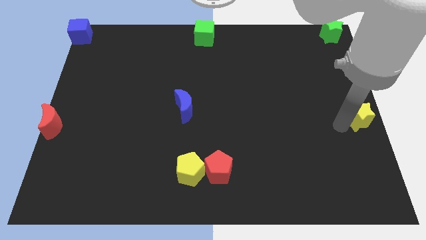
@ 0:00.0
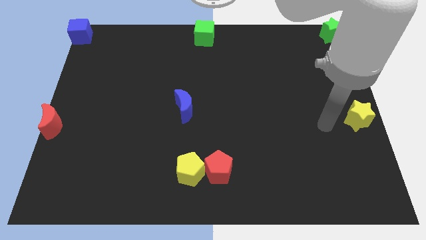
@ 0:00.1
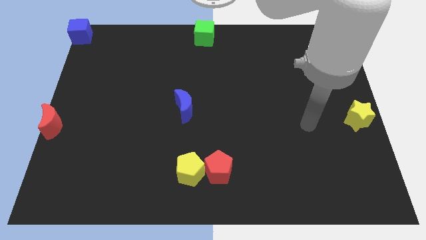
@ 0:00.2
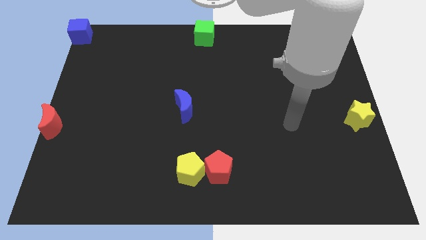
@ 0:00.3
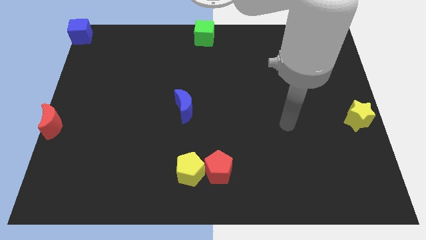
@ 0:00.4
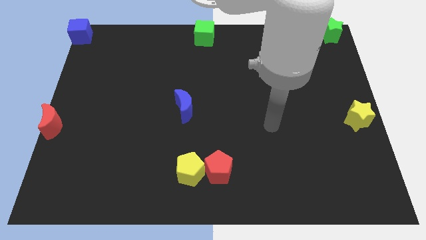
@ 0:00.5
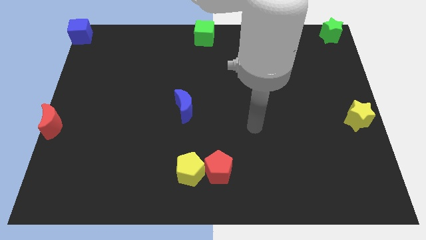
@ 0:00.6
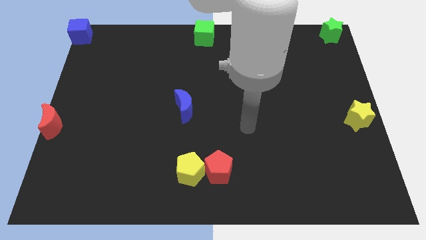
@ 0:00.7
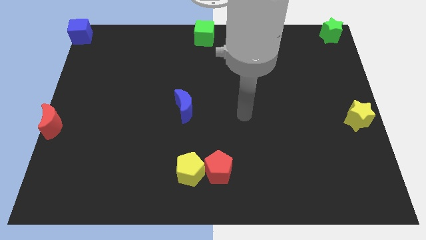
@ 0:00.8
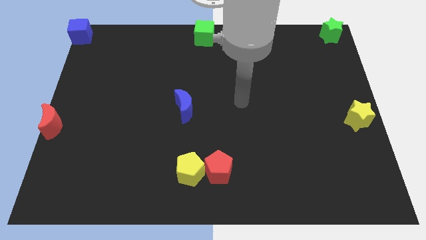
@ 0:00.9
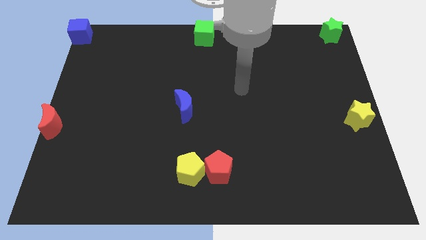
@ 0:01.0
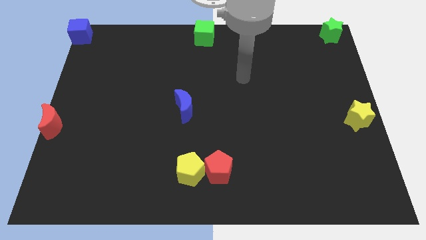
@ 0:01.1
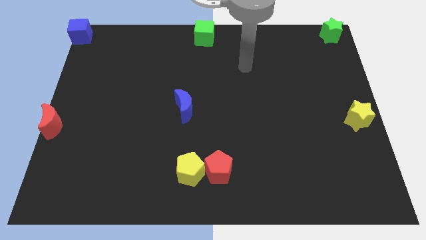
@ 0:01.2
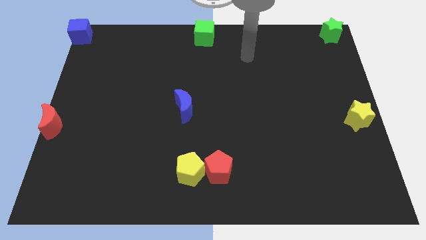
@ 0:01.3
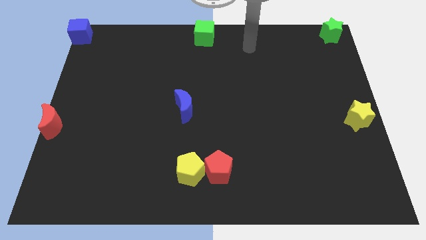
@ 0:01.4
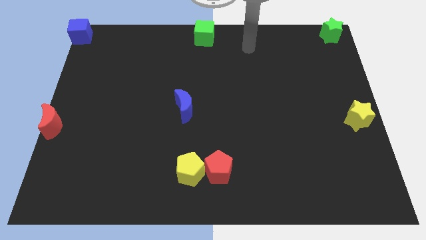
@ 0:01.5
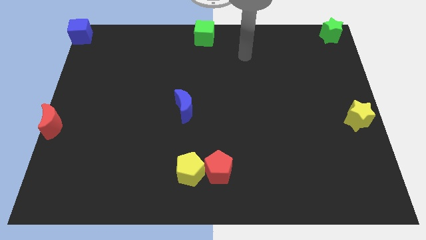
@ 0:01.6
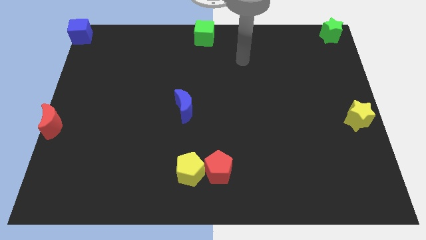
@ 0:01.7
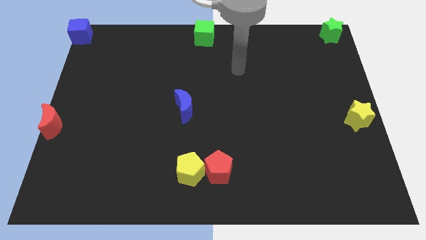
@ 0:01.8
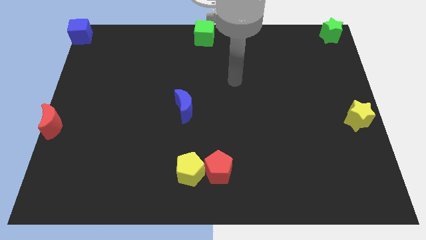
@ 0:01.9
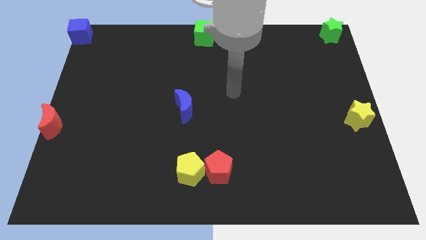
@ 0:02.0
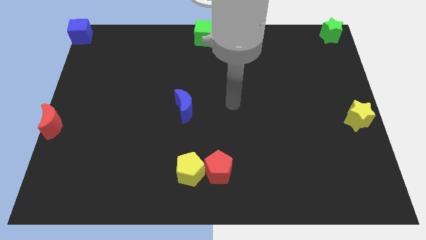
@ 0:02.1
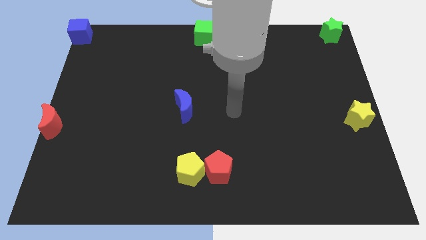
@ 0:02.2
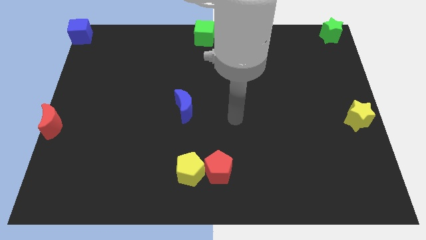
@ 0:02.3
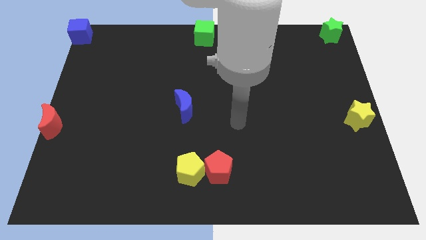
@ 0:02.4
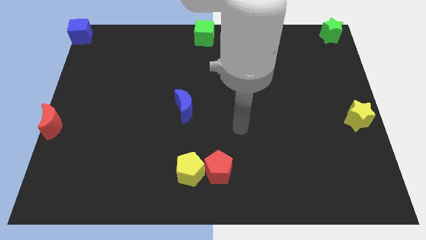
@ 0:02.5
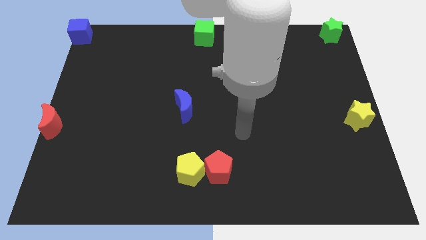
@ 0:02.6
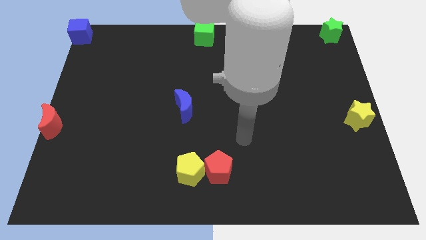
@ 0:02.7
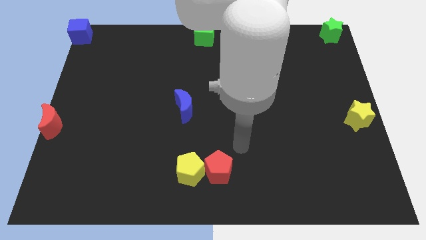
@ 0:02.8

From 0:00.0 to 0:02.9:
move arm to the top of red pentagon

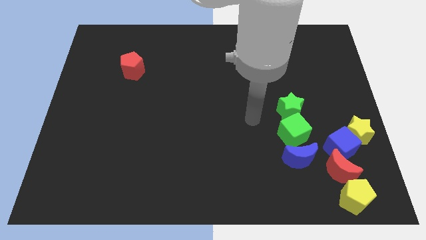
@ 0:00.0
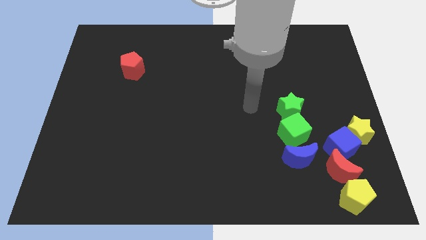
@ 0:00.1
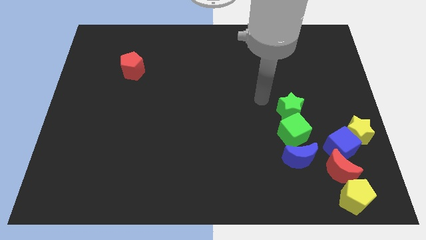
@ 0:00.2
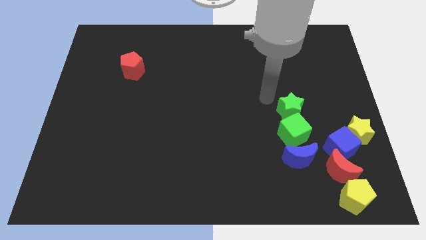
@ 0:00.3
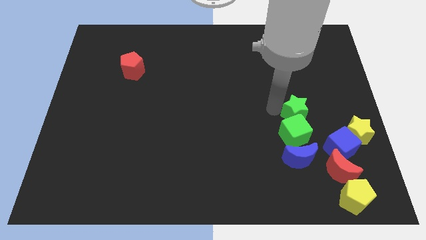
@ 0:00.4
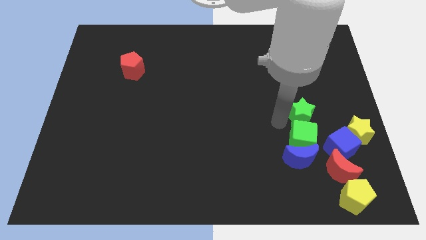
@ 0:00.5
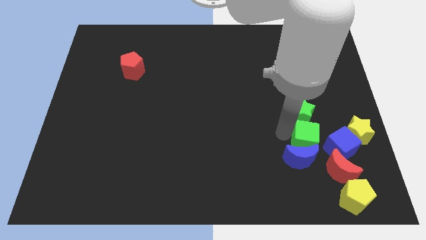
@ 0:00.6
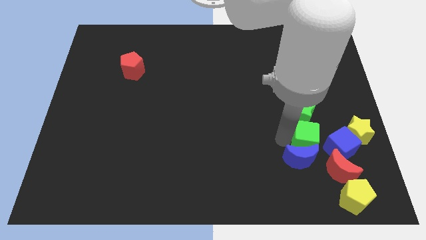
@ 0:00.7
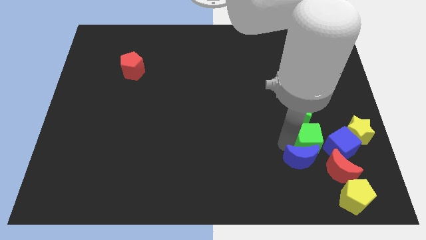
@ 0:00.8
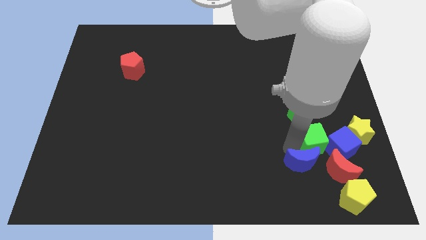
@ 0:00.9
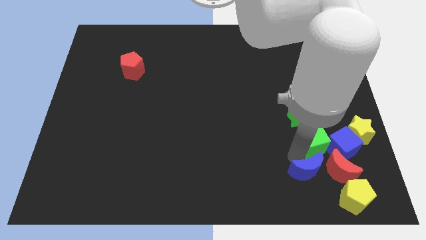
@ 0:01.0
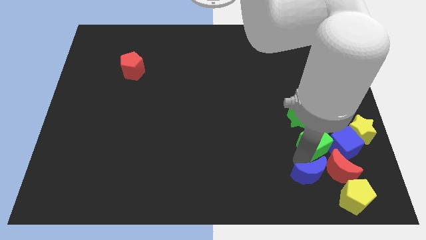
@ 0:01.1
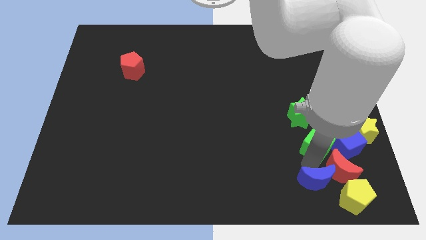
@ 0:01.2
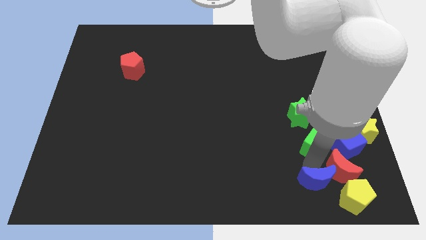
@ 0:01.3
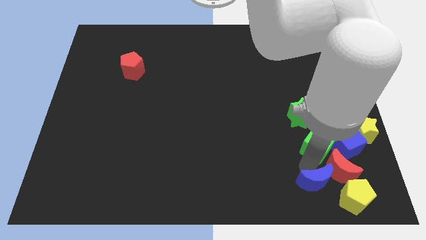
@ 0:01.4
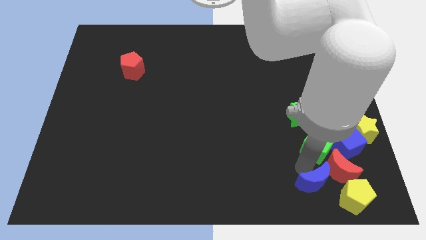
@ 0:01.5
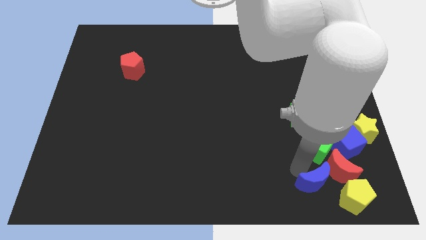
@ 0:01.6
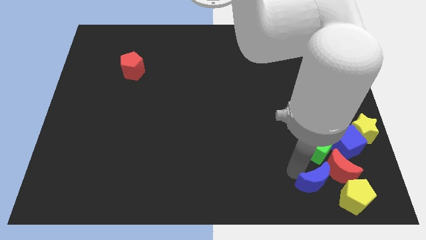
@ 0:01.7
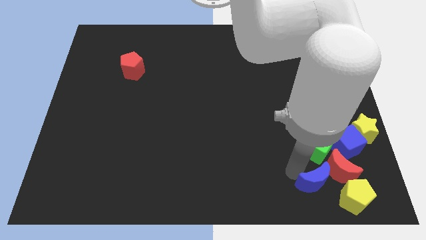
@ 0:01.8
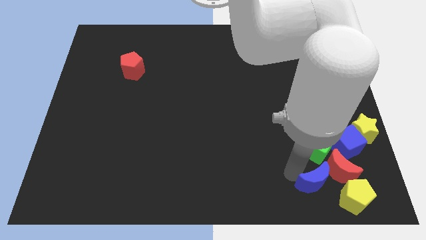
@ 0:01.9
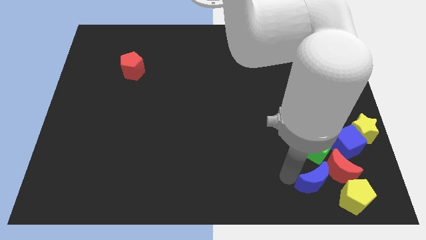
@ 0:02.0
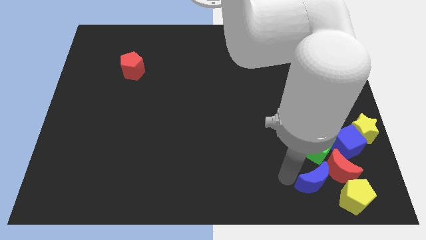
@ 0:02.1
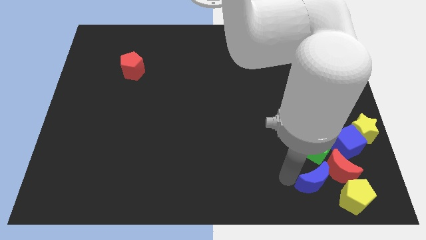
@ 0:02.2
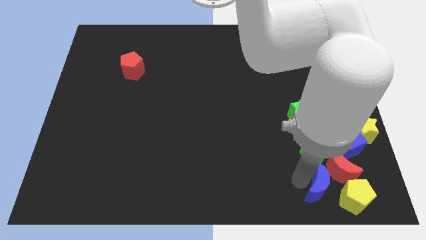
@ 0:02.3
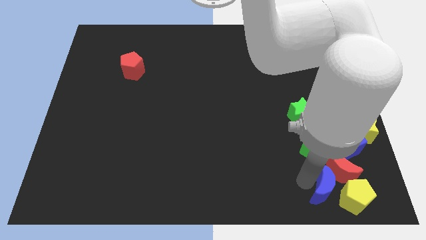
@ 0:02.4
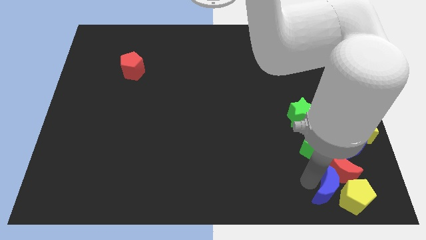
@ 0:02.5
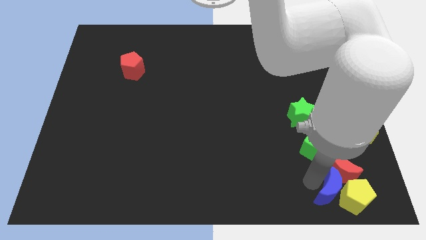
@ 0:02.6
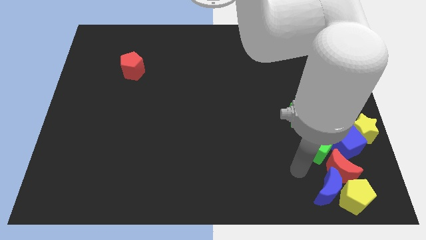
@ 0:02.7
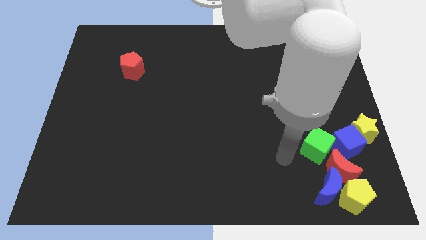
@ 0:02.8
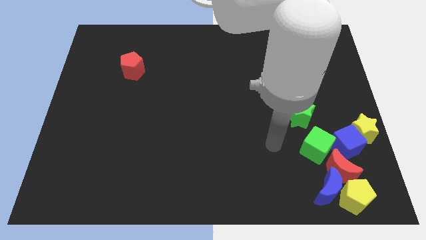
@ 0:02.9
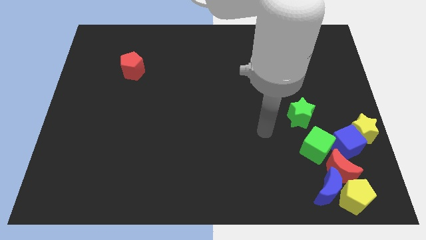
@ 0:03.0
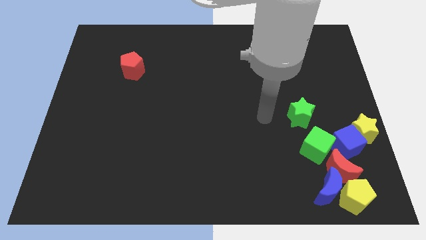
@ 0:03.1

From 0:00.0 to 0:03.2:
push the blue moon to the top left of the yellow pentagon

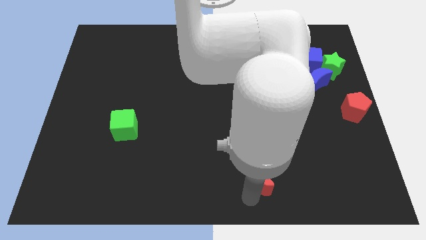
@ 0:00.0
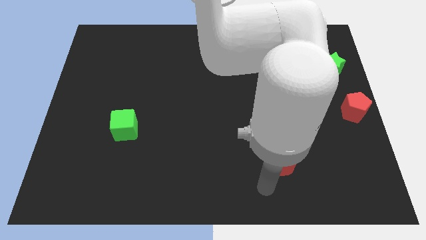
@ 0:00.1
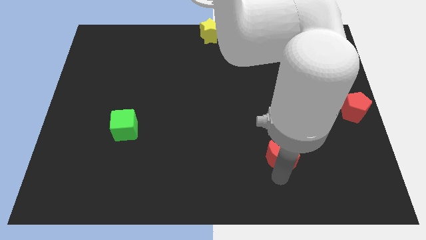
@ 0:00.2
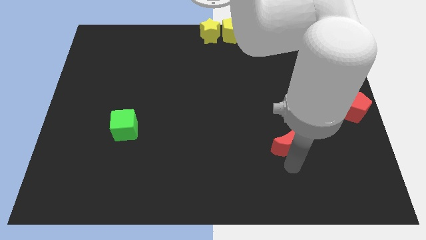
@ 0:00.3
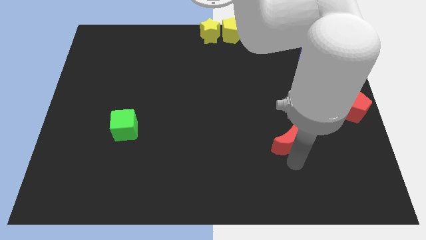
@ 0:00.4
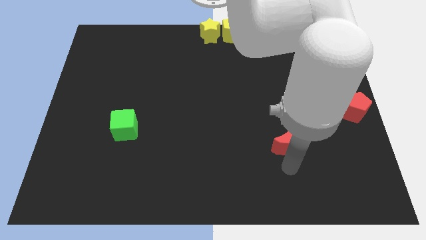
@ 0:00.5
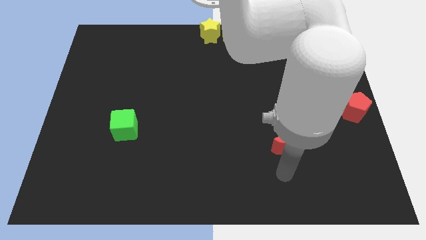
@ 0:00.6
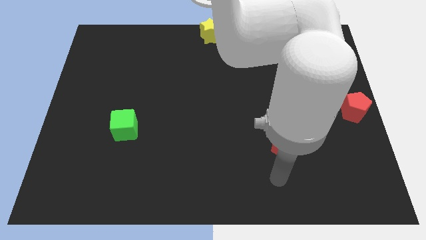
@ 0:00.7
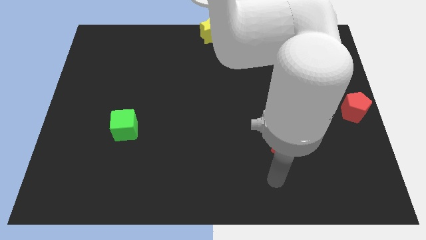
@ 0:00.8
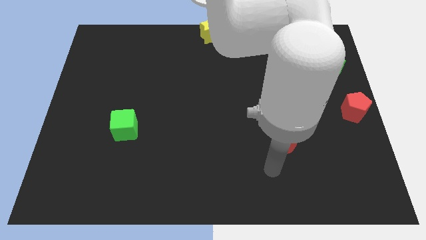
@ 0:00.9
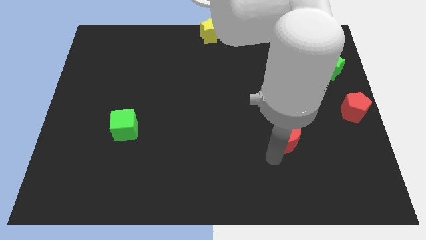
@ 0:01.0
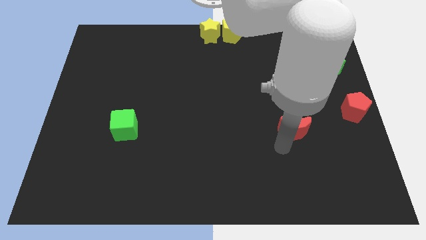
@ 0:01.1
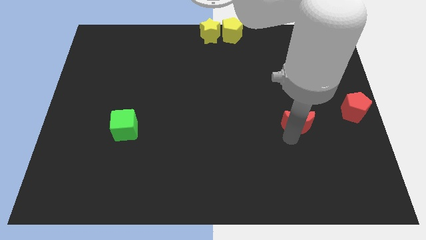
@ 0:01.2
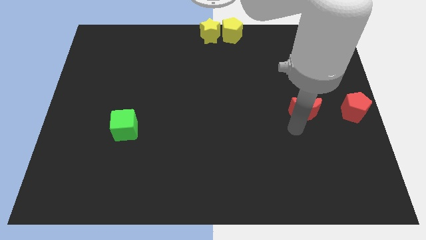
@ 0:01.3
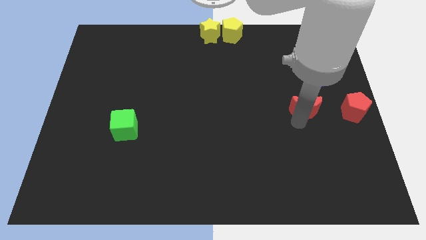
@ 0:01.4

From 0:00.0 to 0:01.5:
place the red moon parallel to red pentagon

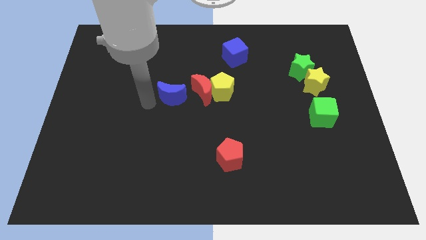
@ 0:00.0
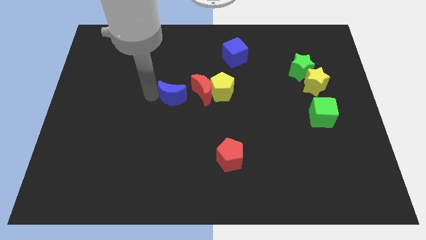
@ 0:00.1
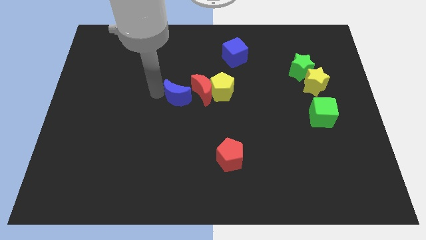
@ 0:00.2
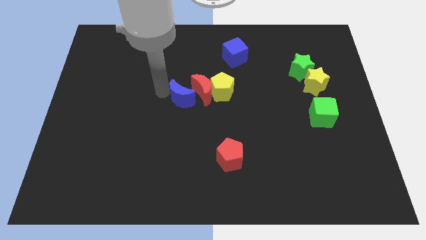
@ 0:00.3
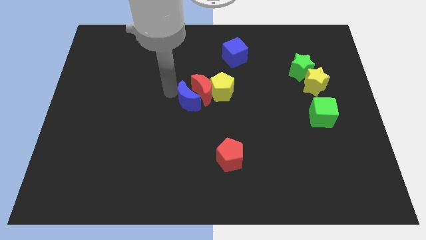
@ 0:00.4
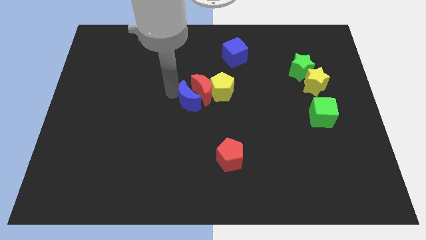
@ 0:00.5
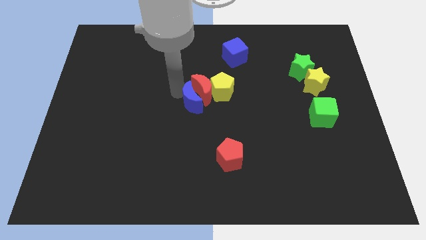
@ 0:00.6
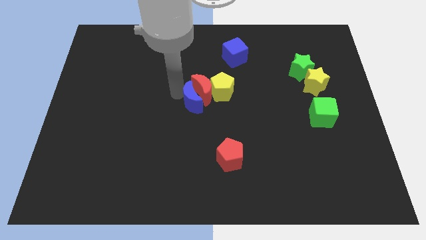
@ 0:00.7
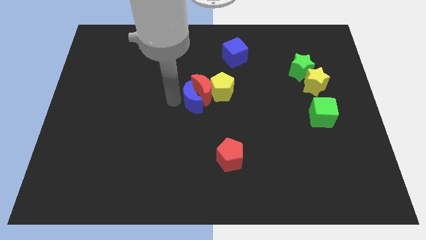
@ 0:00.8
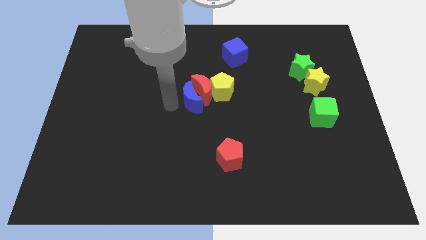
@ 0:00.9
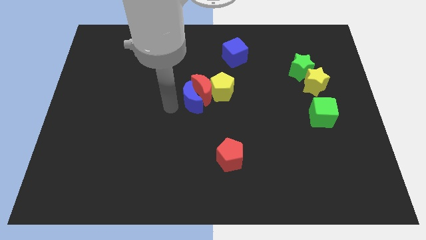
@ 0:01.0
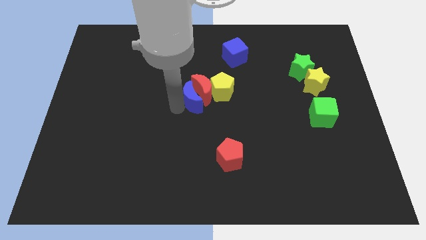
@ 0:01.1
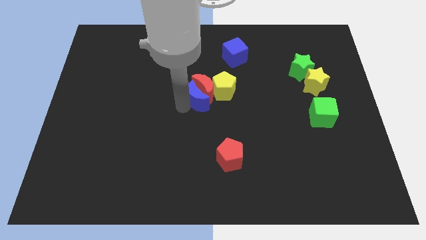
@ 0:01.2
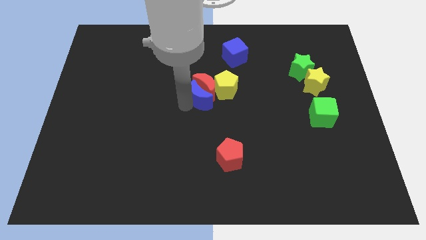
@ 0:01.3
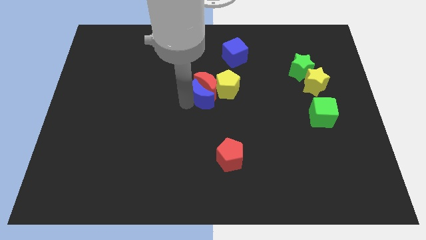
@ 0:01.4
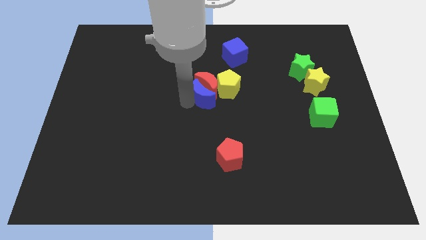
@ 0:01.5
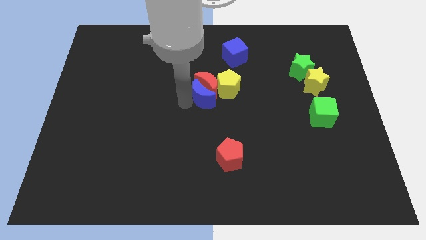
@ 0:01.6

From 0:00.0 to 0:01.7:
make a group of blue moon red moon and yellow pentagon
